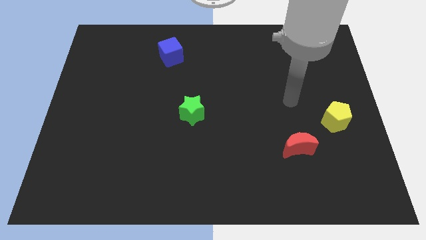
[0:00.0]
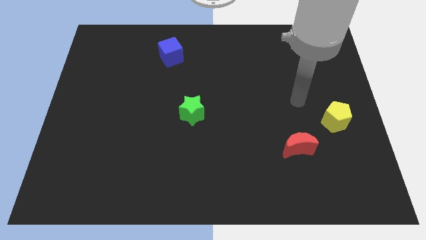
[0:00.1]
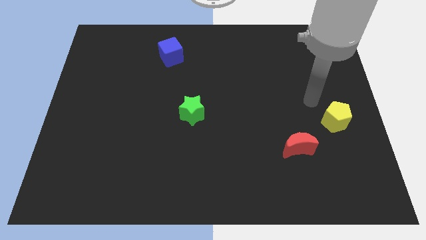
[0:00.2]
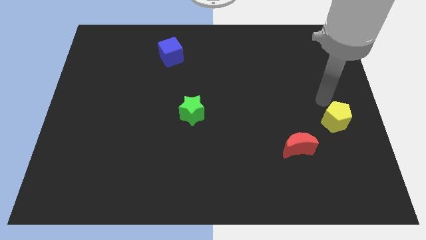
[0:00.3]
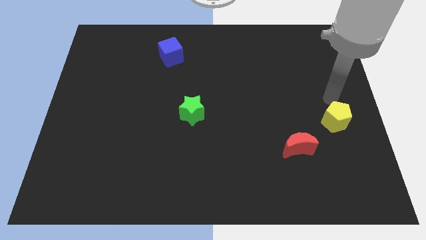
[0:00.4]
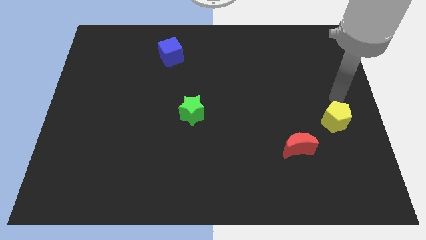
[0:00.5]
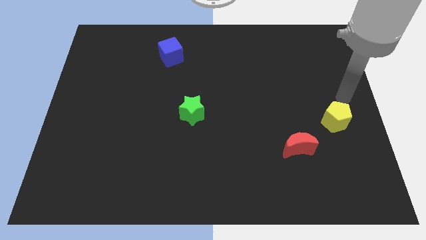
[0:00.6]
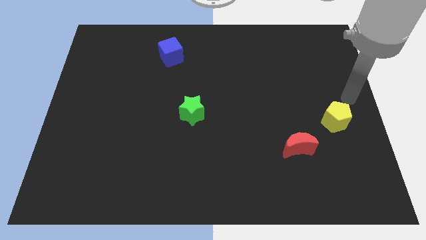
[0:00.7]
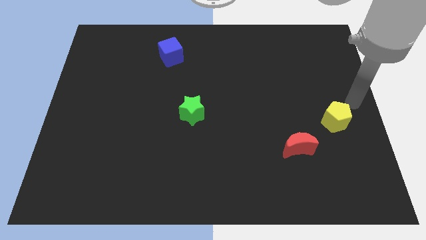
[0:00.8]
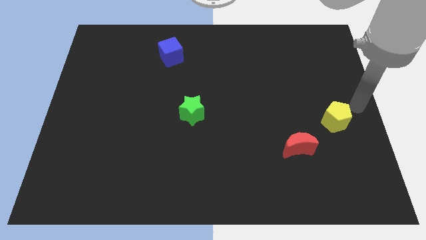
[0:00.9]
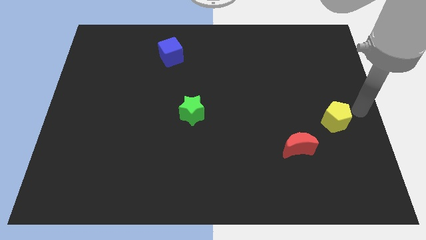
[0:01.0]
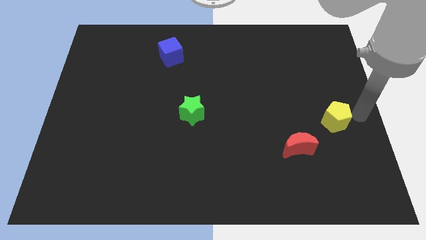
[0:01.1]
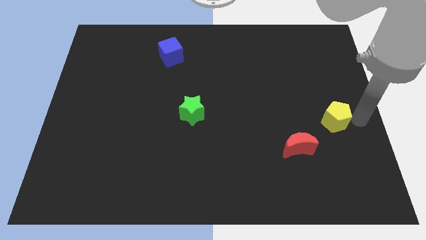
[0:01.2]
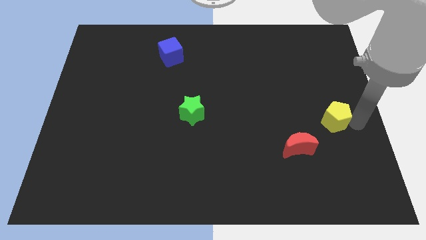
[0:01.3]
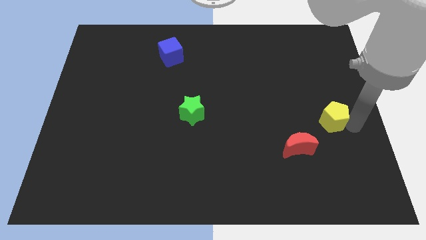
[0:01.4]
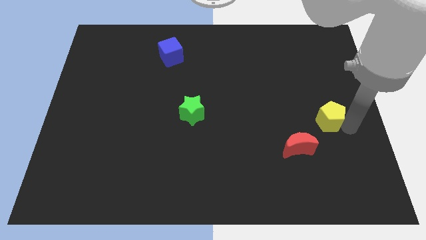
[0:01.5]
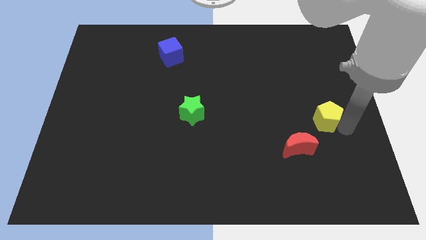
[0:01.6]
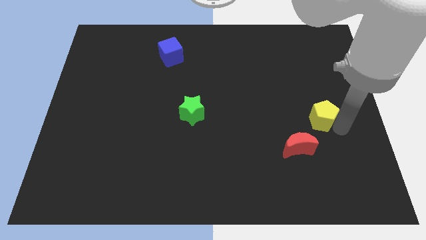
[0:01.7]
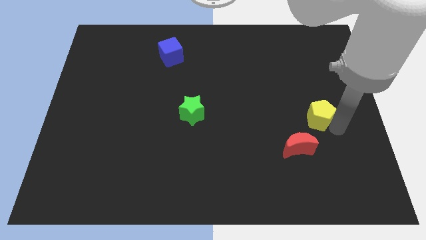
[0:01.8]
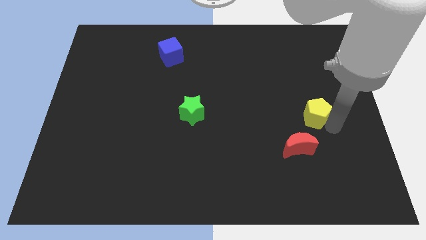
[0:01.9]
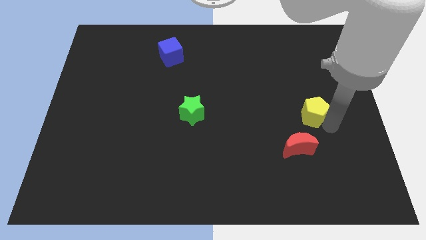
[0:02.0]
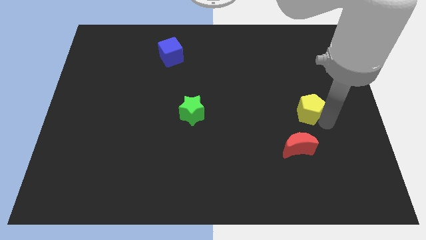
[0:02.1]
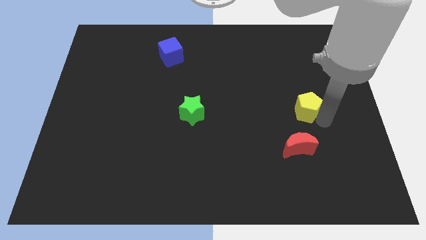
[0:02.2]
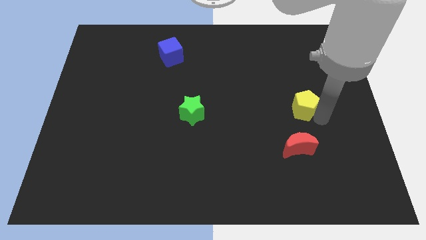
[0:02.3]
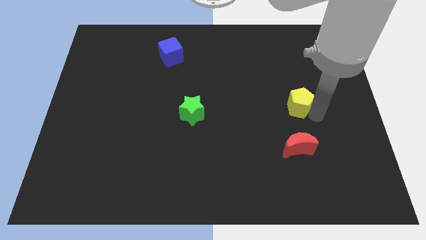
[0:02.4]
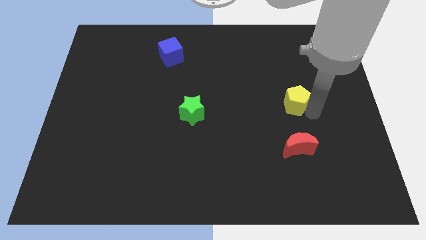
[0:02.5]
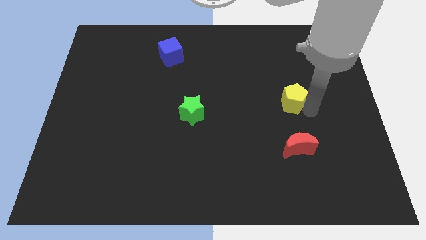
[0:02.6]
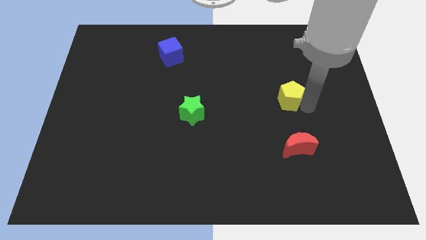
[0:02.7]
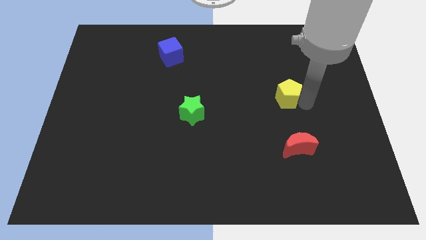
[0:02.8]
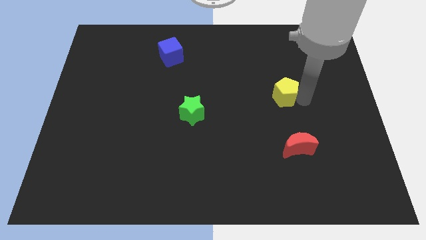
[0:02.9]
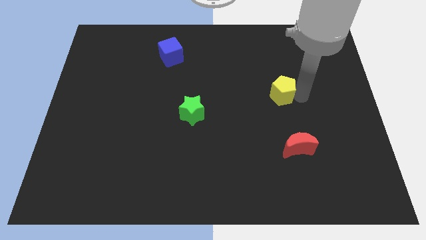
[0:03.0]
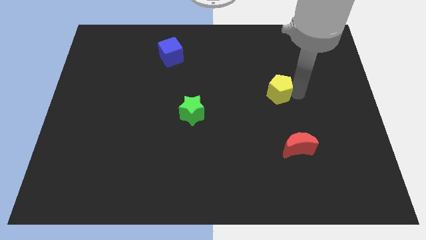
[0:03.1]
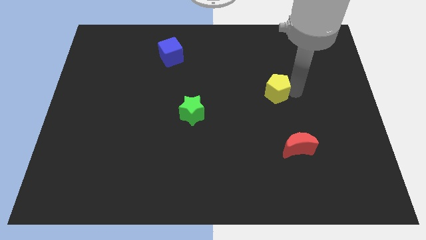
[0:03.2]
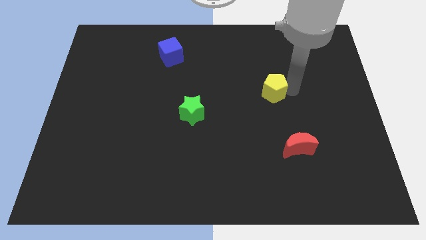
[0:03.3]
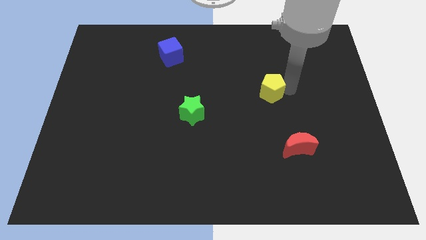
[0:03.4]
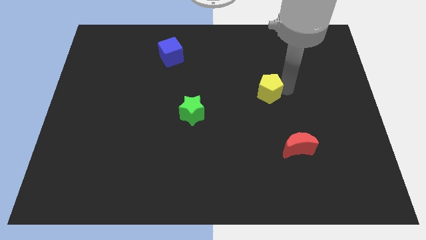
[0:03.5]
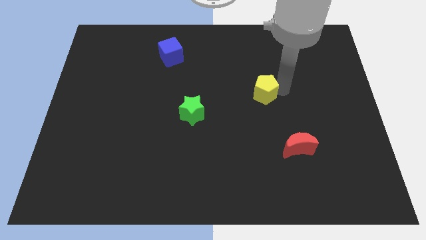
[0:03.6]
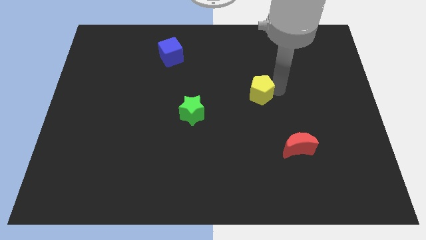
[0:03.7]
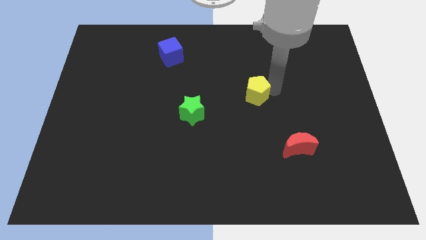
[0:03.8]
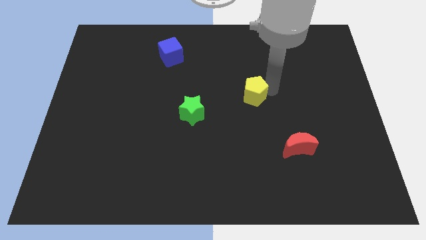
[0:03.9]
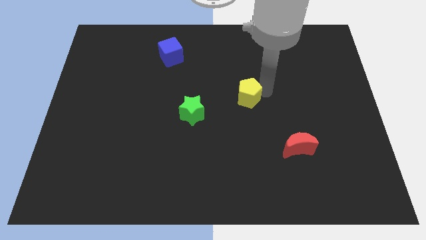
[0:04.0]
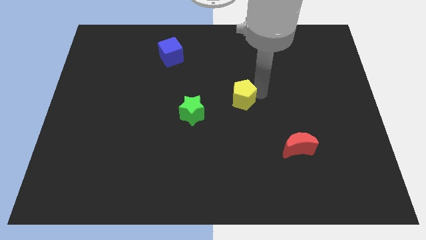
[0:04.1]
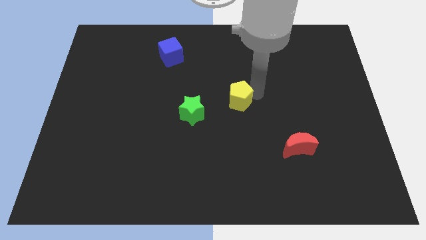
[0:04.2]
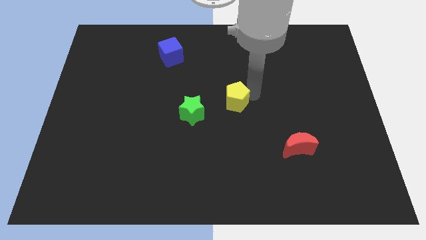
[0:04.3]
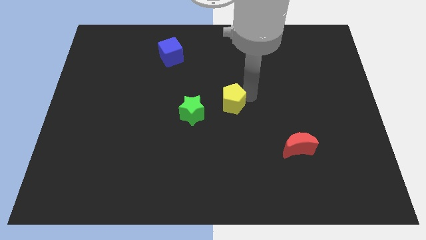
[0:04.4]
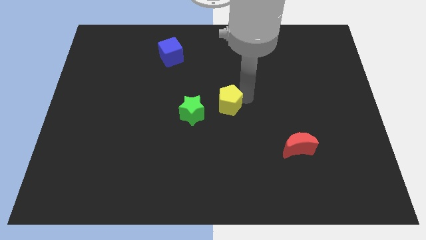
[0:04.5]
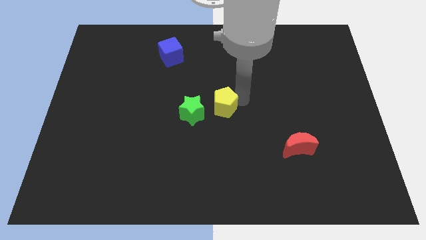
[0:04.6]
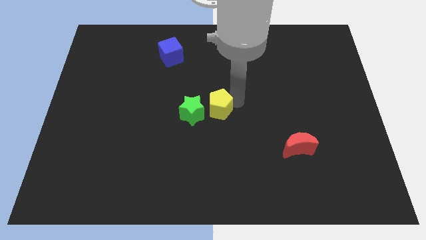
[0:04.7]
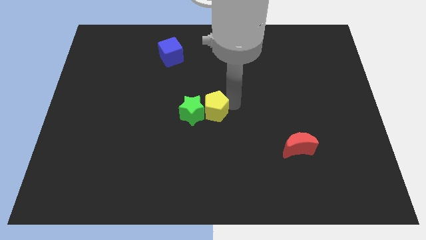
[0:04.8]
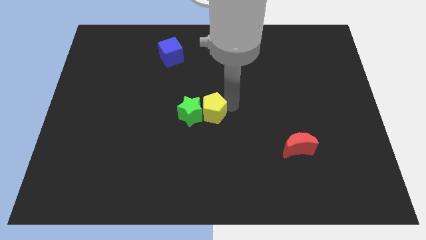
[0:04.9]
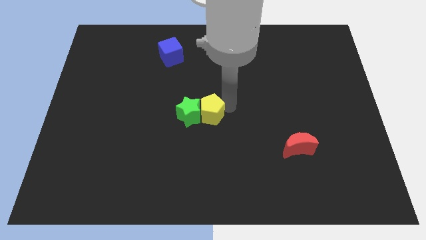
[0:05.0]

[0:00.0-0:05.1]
put the yellow pentagon next to the star

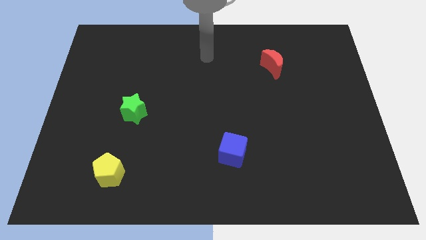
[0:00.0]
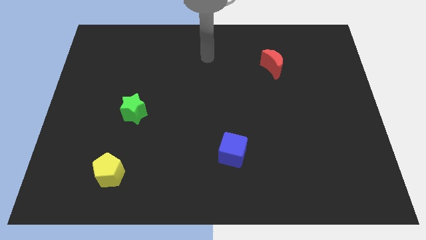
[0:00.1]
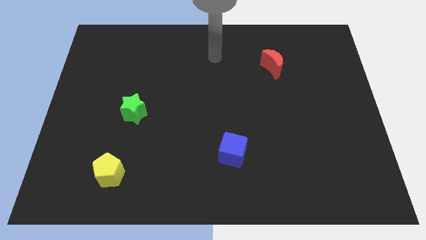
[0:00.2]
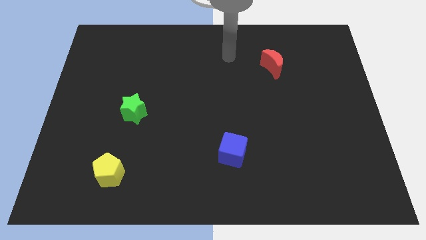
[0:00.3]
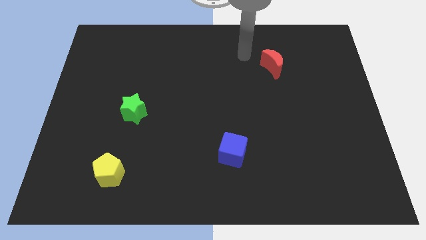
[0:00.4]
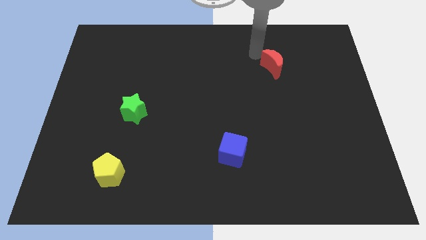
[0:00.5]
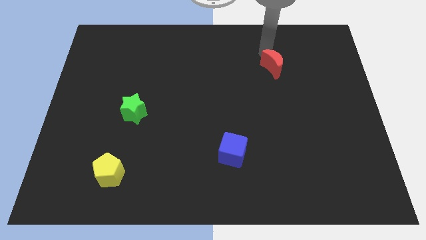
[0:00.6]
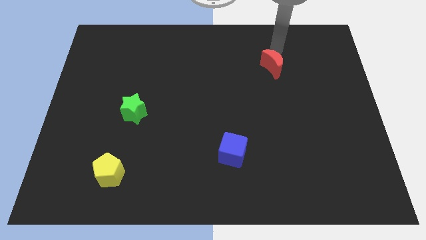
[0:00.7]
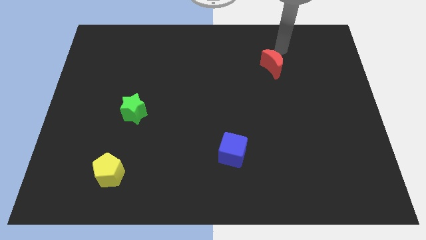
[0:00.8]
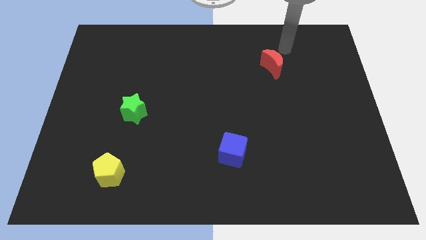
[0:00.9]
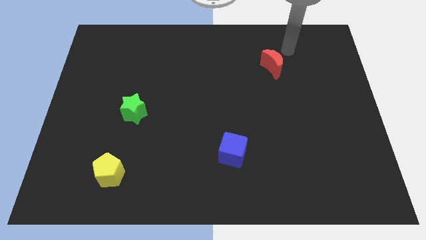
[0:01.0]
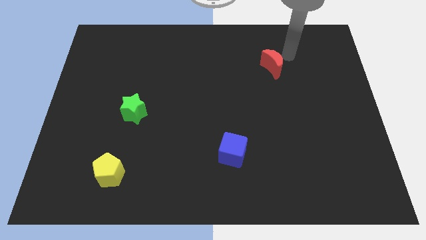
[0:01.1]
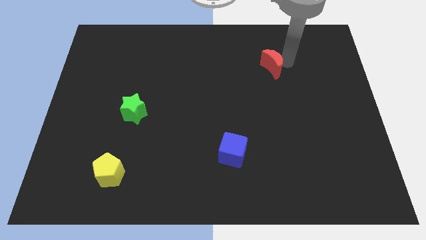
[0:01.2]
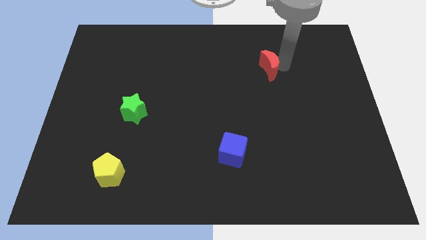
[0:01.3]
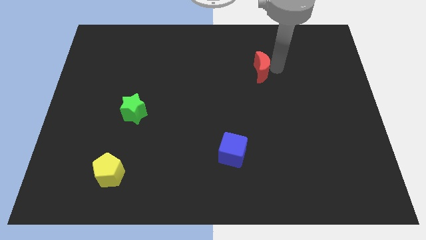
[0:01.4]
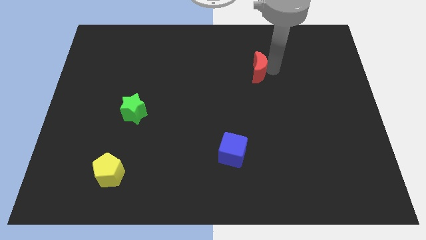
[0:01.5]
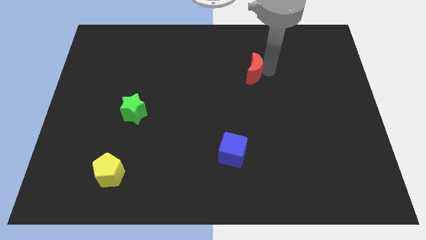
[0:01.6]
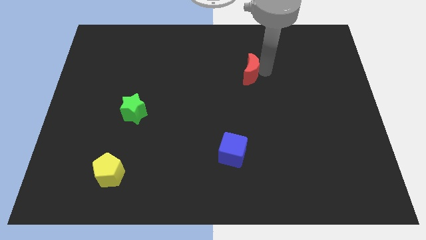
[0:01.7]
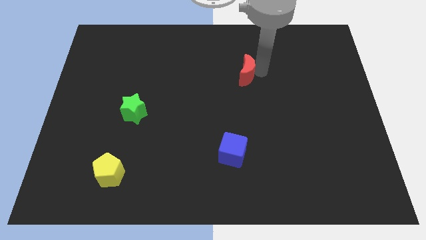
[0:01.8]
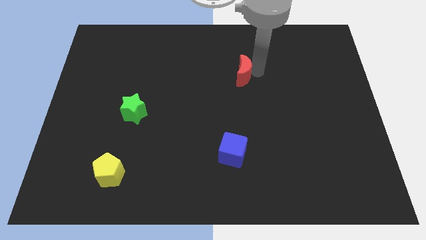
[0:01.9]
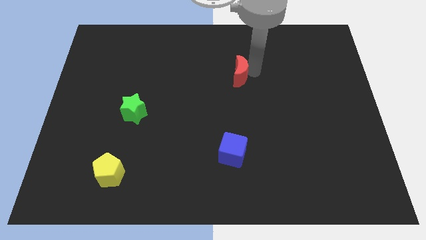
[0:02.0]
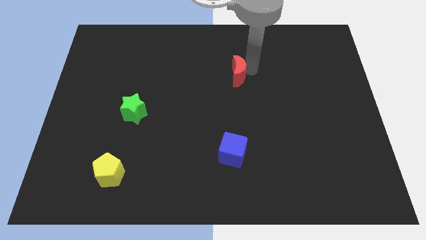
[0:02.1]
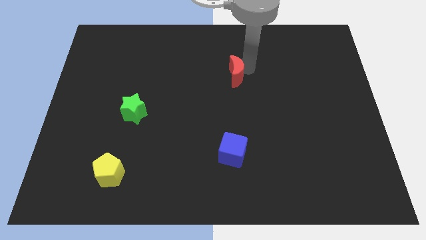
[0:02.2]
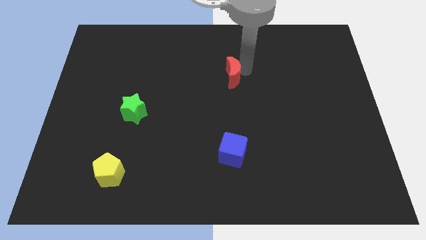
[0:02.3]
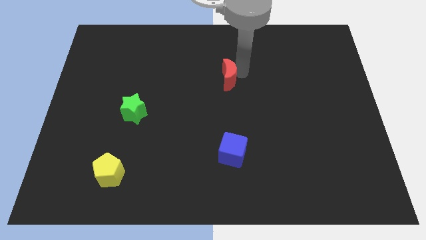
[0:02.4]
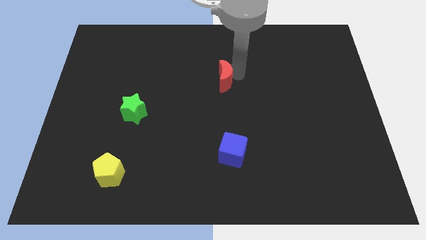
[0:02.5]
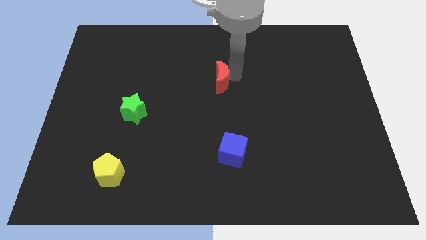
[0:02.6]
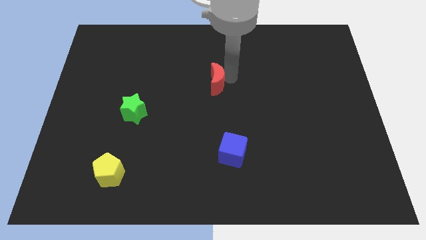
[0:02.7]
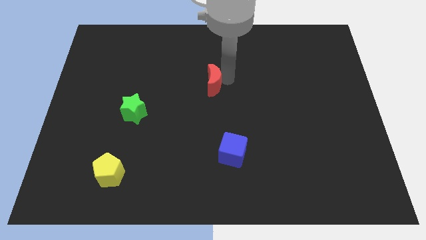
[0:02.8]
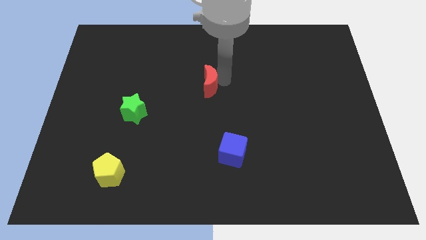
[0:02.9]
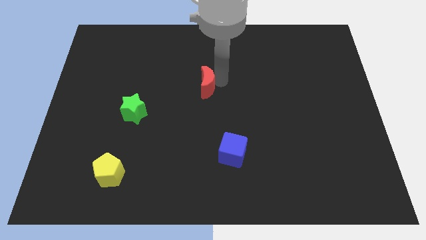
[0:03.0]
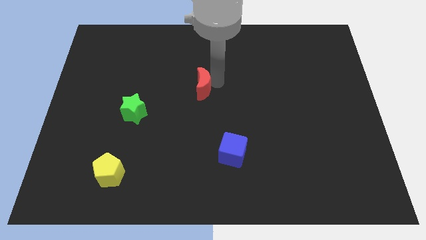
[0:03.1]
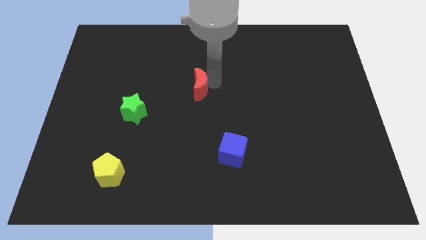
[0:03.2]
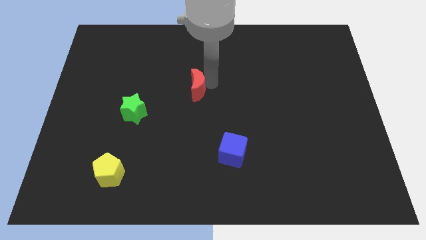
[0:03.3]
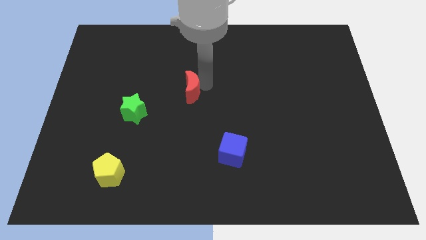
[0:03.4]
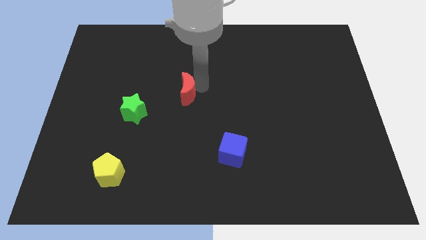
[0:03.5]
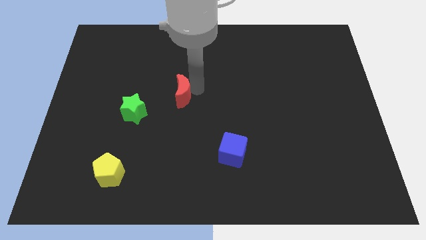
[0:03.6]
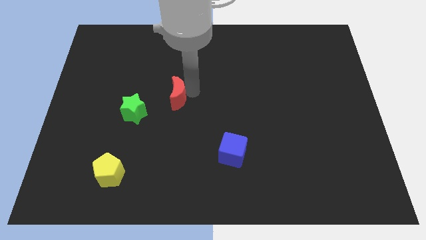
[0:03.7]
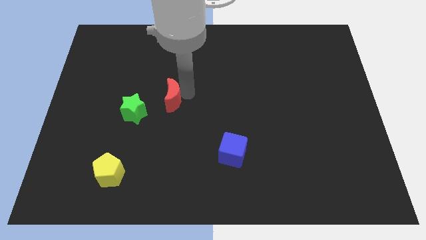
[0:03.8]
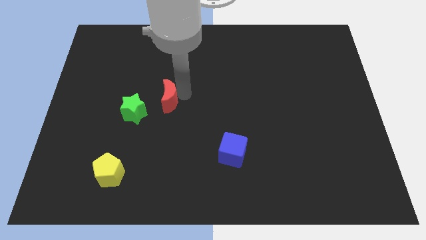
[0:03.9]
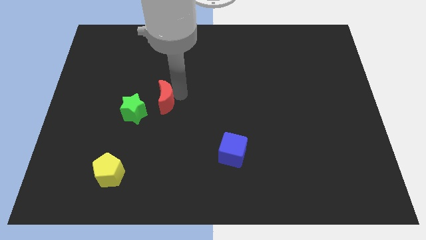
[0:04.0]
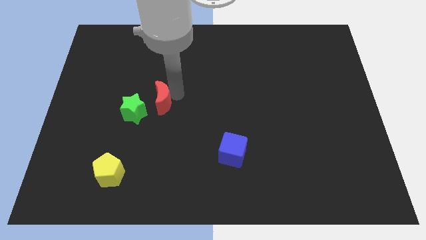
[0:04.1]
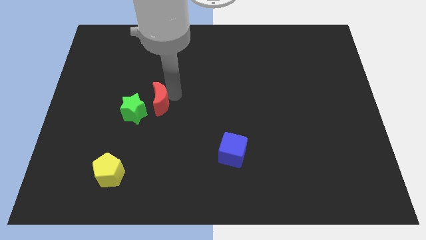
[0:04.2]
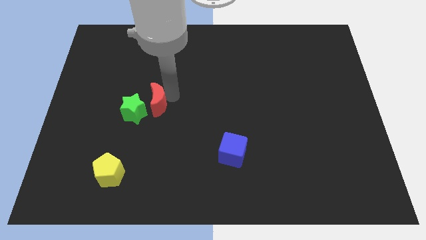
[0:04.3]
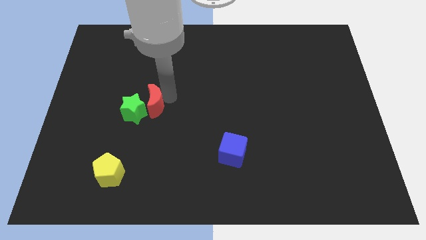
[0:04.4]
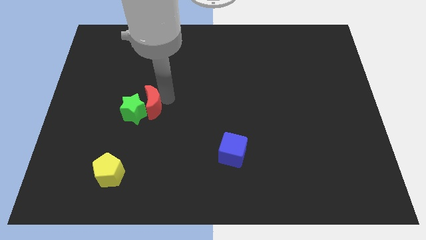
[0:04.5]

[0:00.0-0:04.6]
push the moon towards the green star
